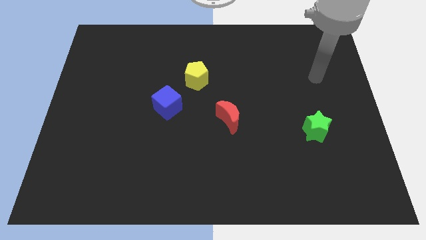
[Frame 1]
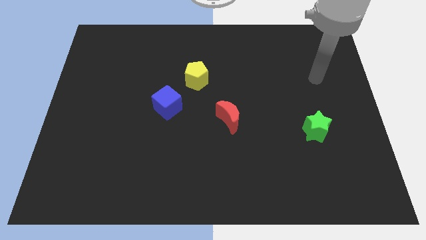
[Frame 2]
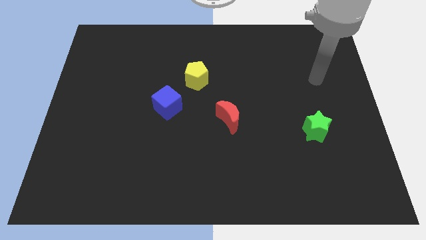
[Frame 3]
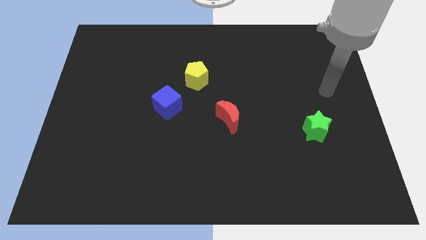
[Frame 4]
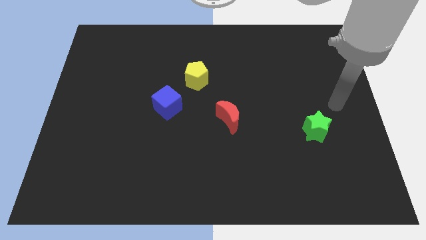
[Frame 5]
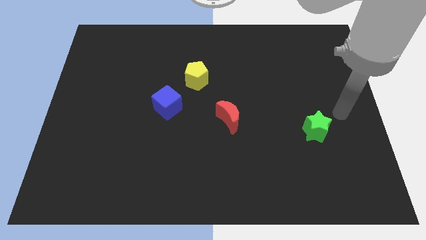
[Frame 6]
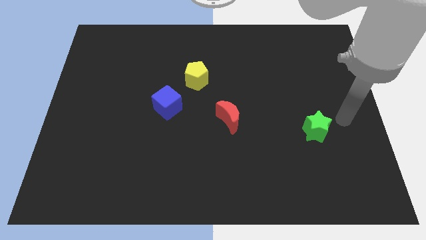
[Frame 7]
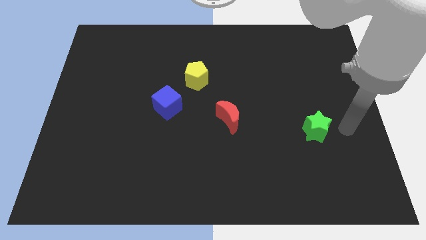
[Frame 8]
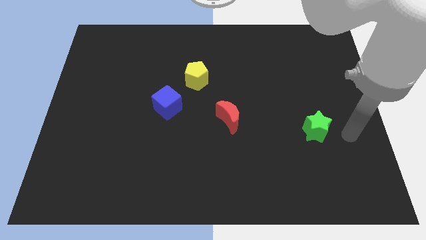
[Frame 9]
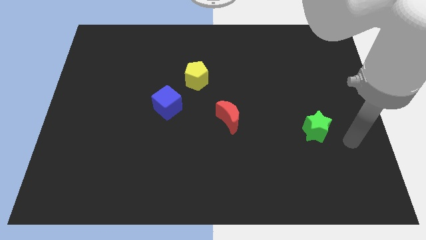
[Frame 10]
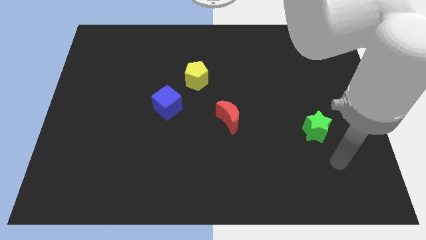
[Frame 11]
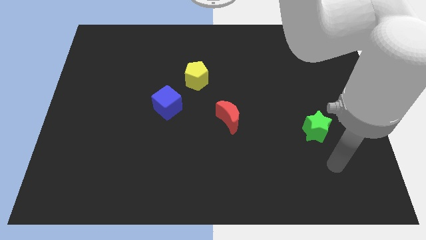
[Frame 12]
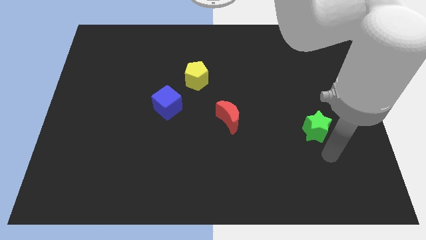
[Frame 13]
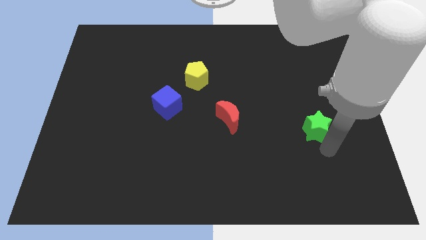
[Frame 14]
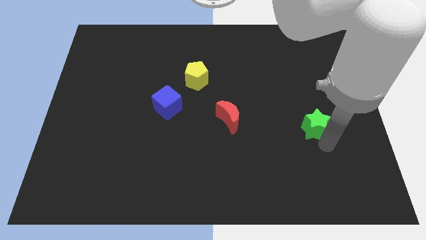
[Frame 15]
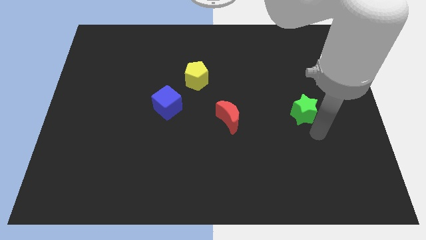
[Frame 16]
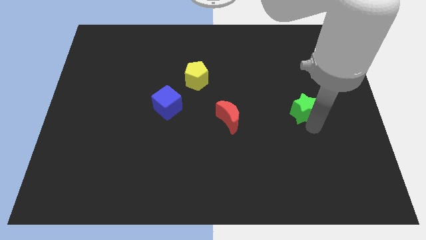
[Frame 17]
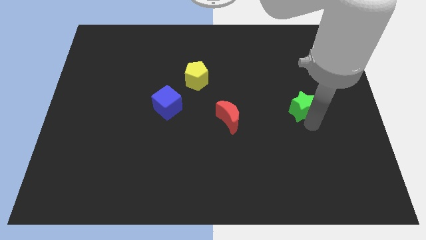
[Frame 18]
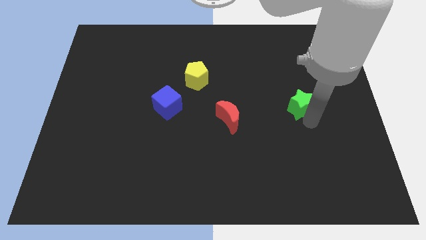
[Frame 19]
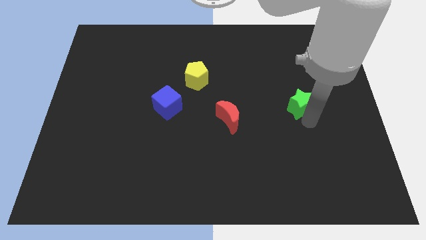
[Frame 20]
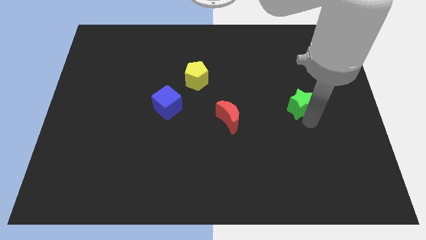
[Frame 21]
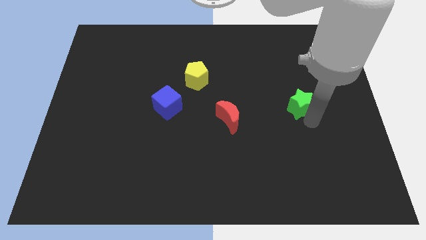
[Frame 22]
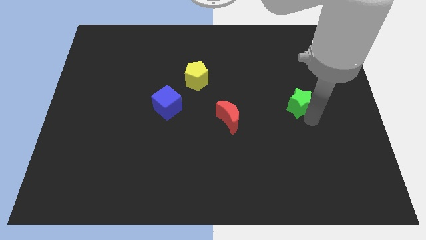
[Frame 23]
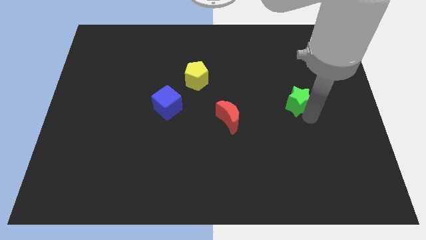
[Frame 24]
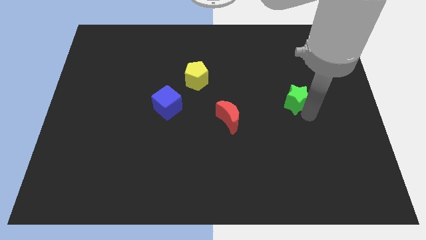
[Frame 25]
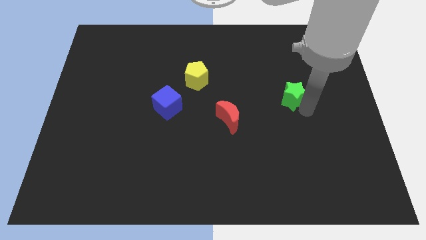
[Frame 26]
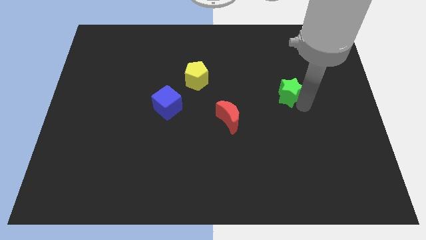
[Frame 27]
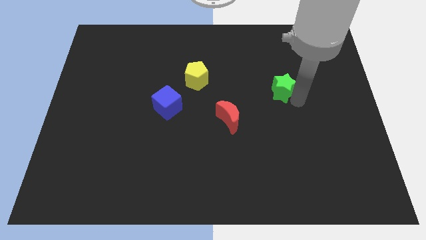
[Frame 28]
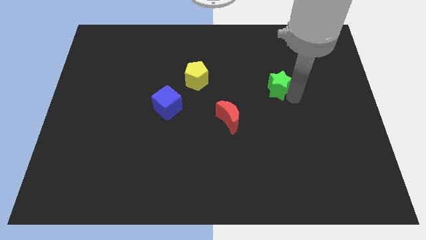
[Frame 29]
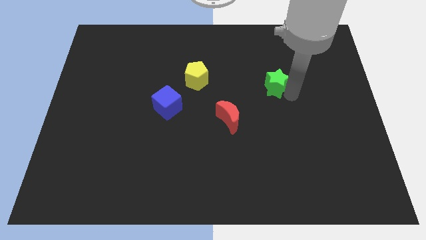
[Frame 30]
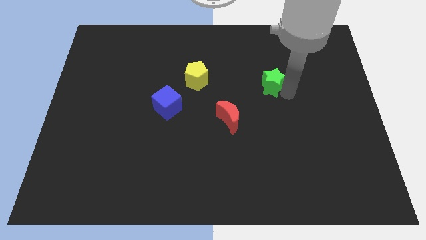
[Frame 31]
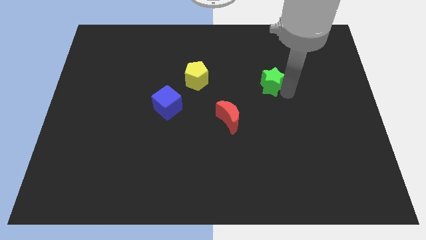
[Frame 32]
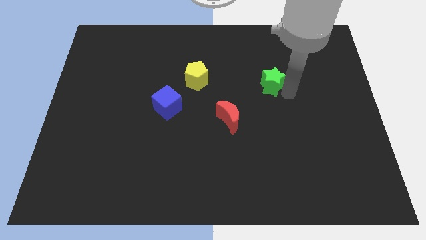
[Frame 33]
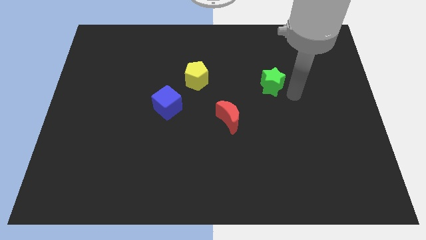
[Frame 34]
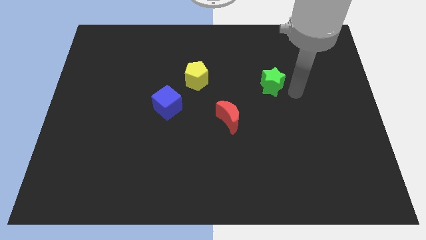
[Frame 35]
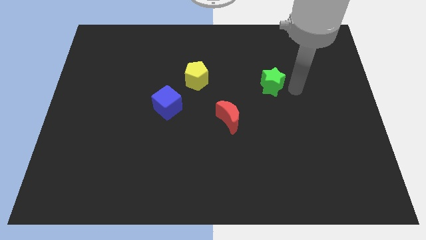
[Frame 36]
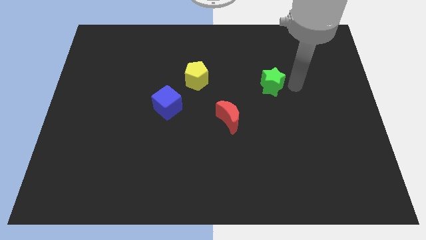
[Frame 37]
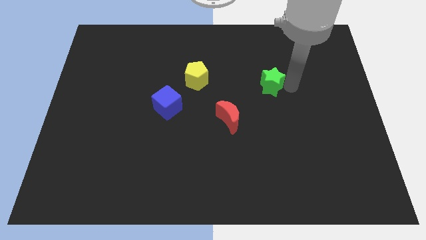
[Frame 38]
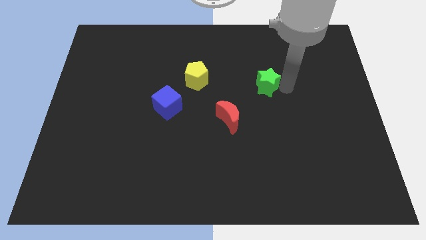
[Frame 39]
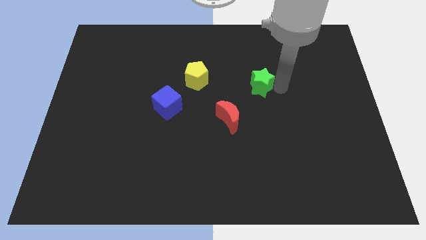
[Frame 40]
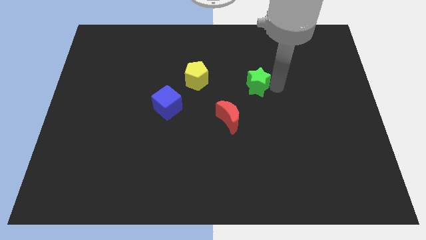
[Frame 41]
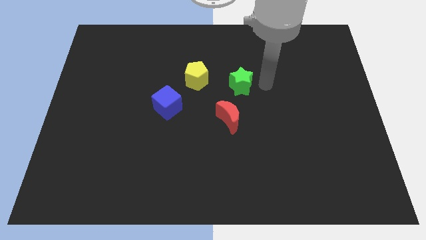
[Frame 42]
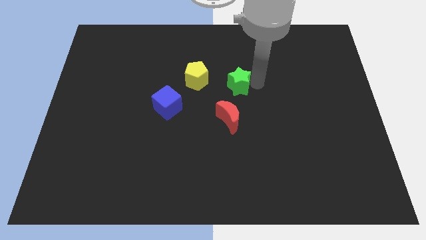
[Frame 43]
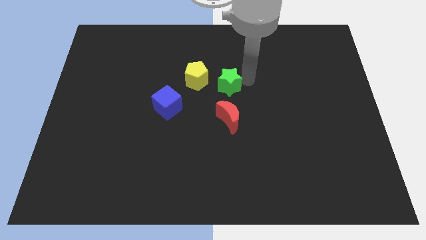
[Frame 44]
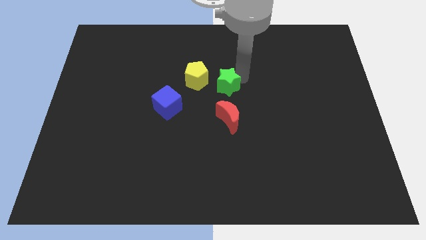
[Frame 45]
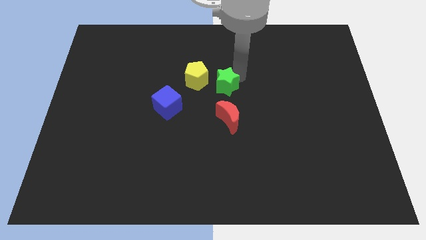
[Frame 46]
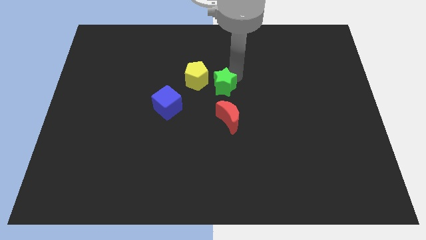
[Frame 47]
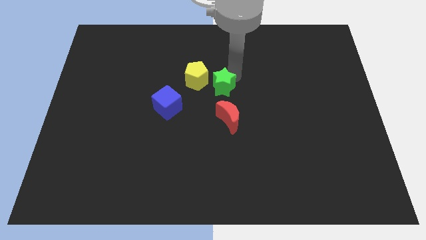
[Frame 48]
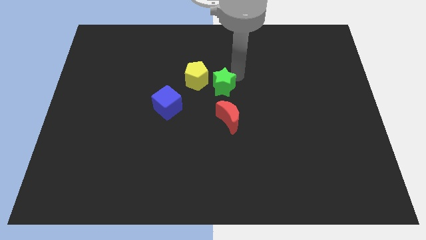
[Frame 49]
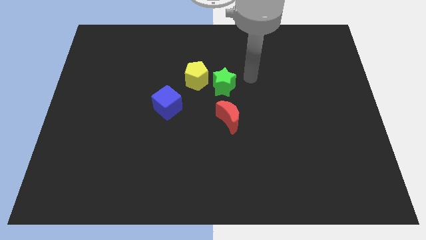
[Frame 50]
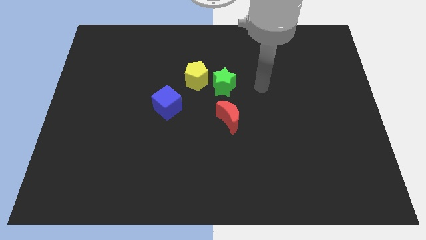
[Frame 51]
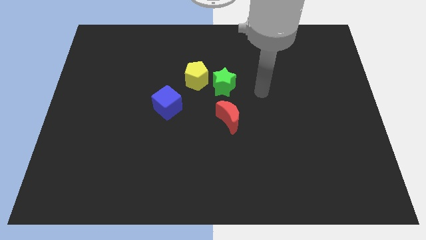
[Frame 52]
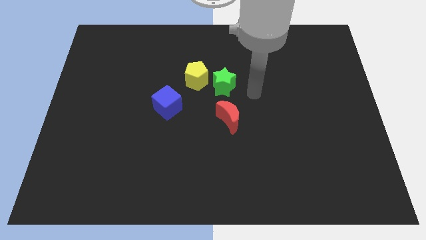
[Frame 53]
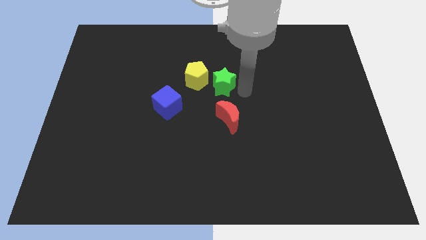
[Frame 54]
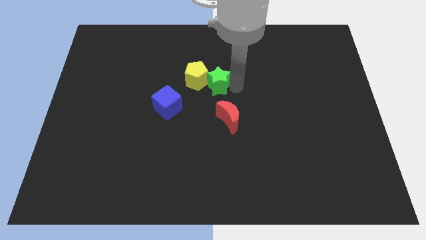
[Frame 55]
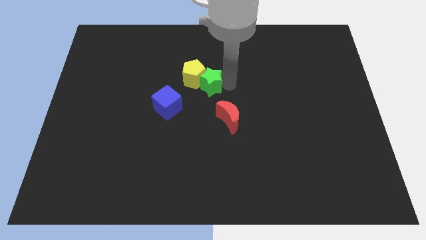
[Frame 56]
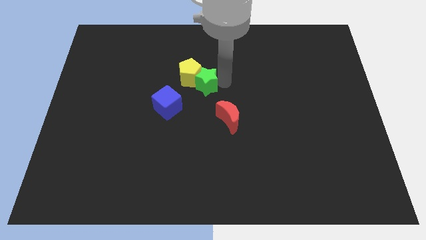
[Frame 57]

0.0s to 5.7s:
push the green block next to the yellow pentagon

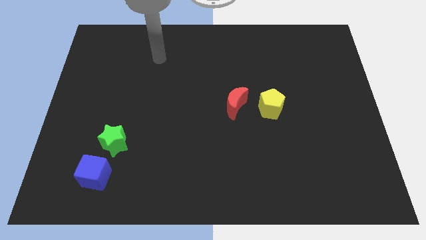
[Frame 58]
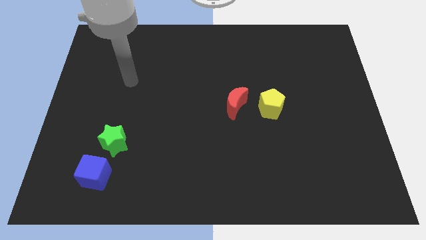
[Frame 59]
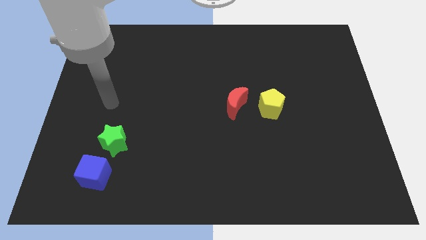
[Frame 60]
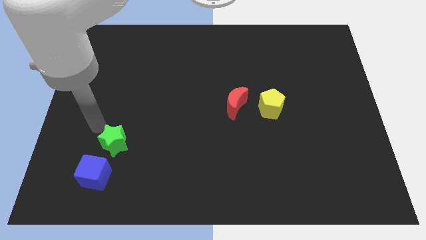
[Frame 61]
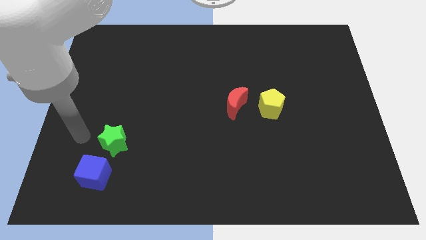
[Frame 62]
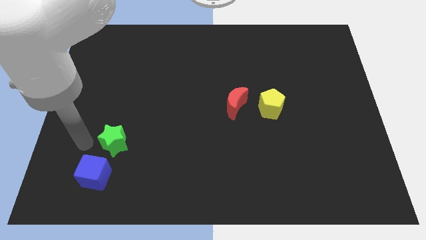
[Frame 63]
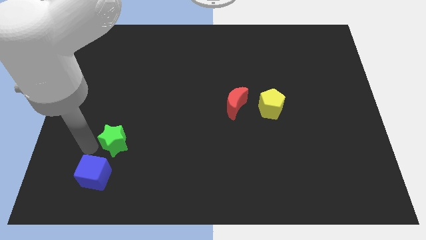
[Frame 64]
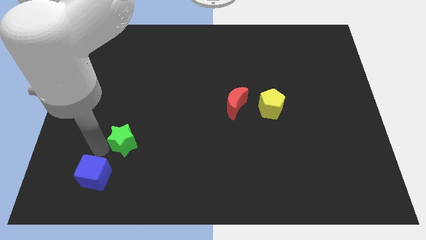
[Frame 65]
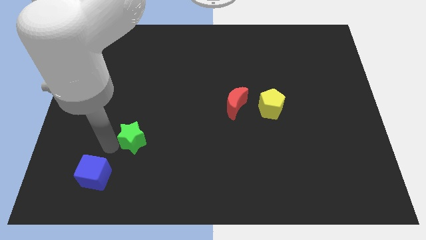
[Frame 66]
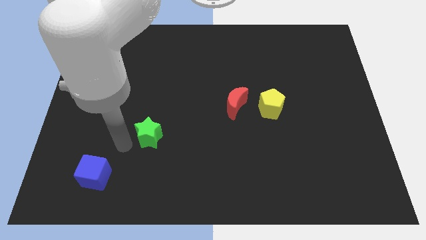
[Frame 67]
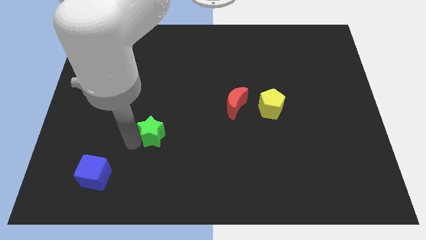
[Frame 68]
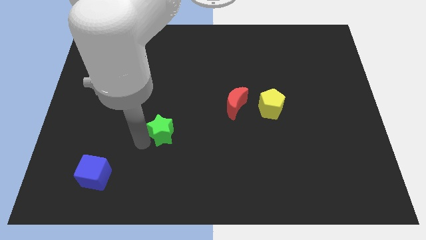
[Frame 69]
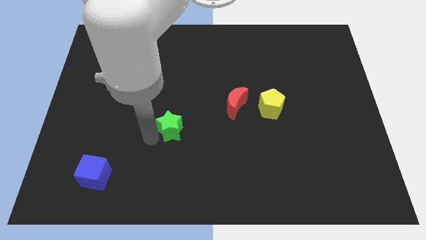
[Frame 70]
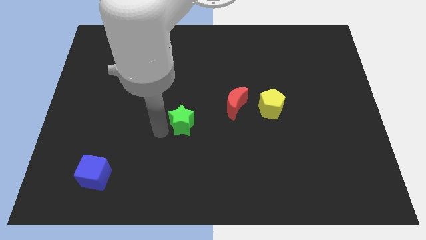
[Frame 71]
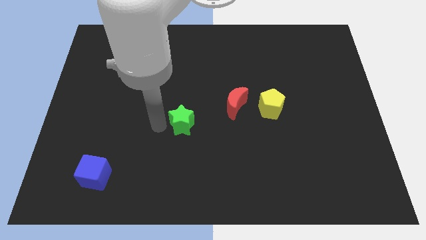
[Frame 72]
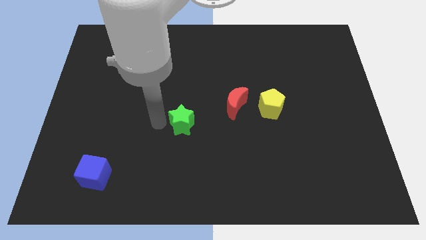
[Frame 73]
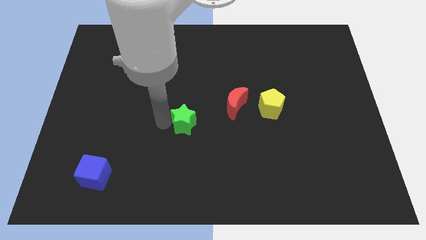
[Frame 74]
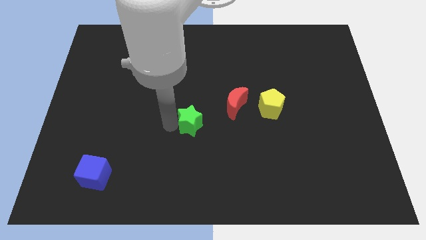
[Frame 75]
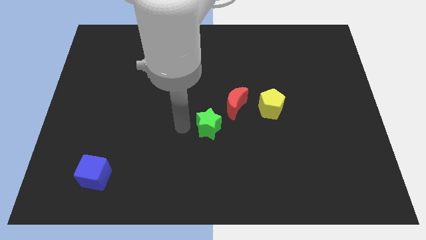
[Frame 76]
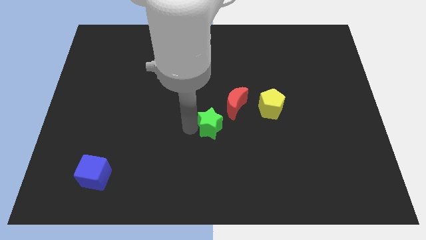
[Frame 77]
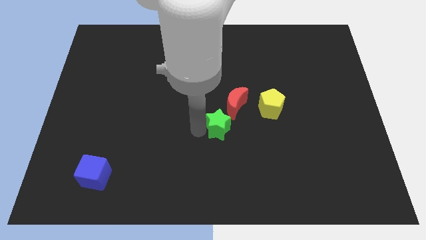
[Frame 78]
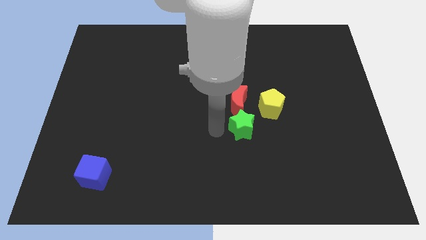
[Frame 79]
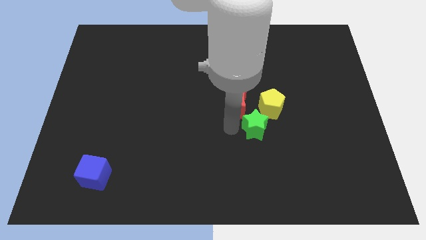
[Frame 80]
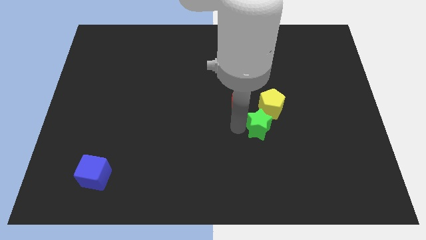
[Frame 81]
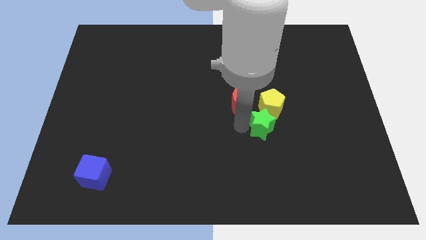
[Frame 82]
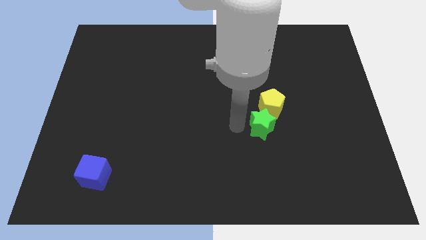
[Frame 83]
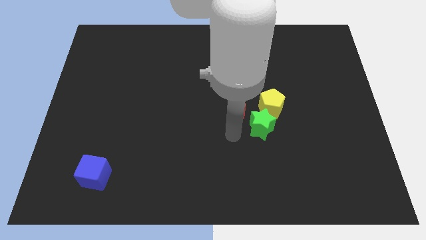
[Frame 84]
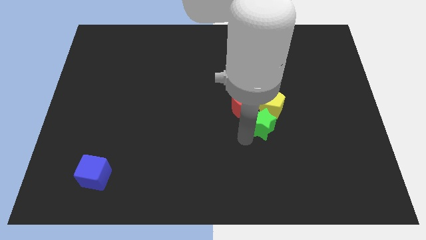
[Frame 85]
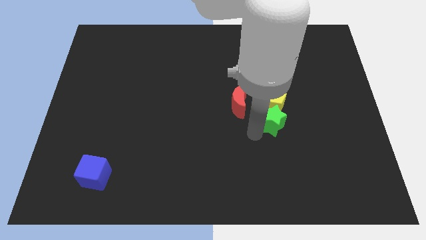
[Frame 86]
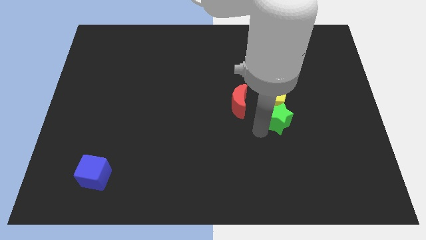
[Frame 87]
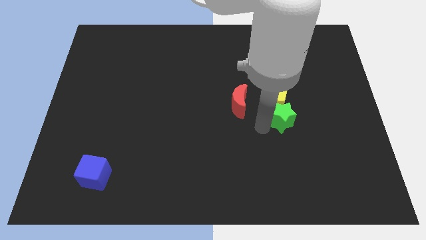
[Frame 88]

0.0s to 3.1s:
slide the star to the yellow block
